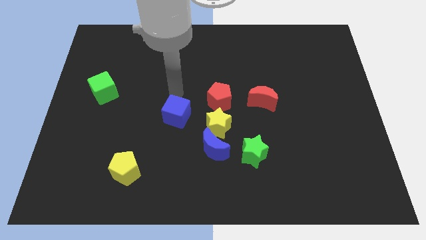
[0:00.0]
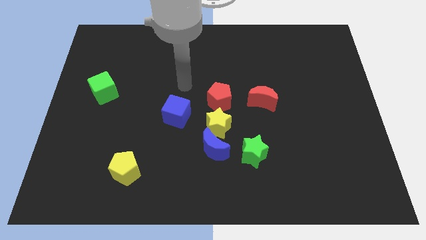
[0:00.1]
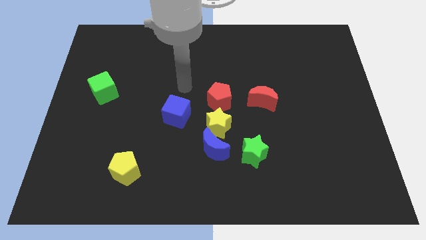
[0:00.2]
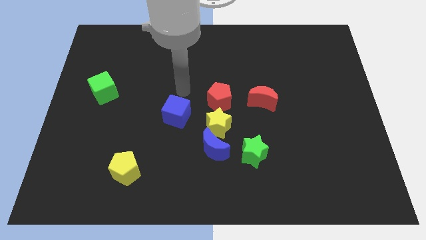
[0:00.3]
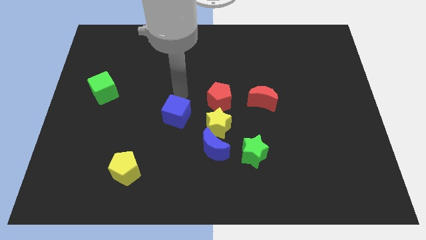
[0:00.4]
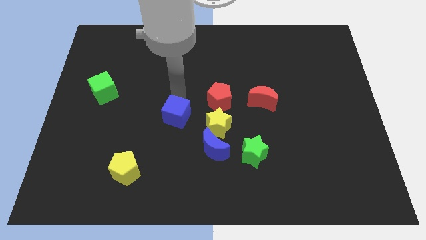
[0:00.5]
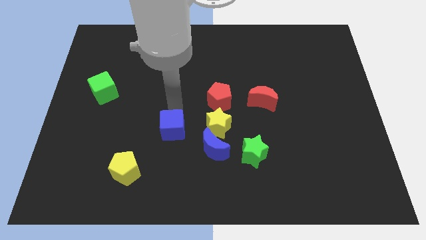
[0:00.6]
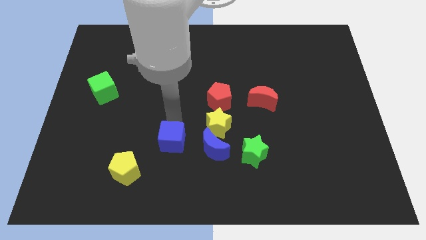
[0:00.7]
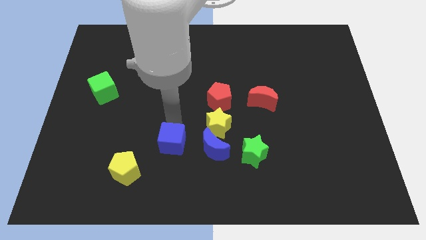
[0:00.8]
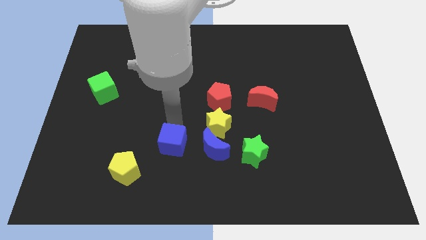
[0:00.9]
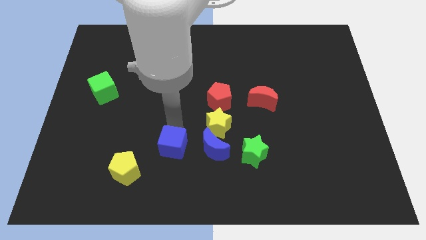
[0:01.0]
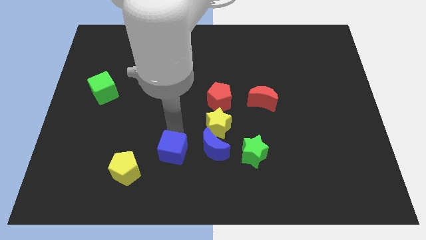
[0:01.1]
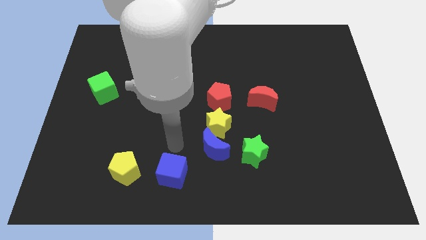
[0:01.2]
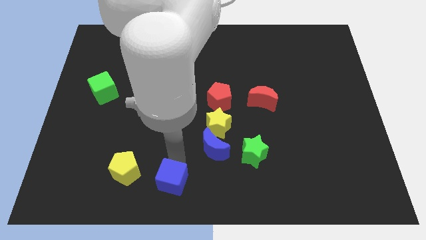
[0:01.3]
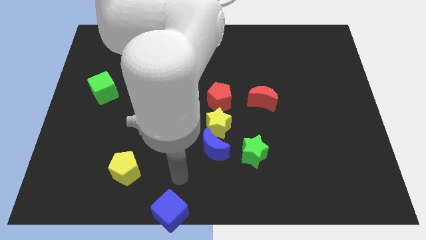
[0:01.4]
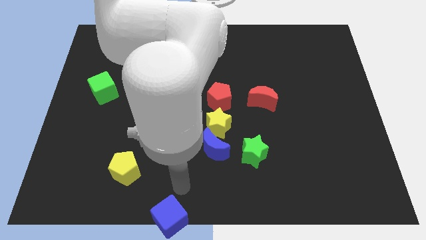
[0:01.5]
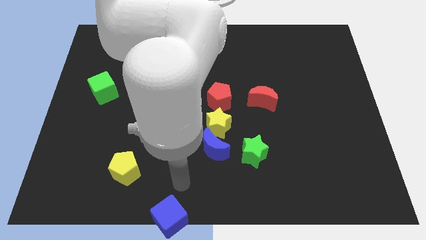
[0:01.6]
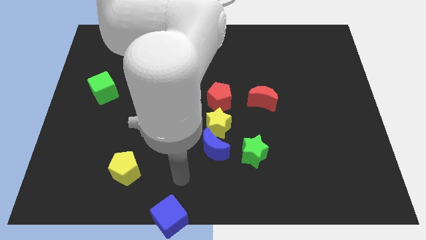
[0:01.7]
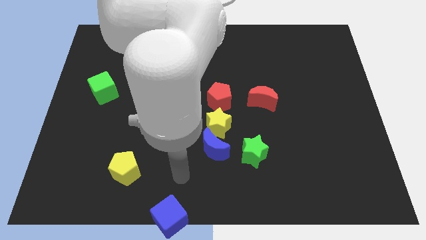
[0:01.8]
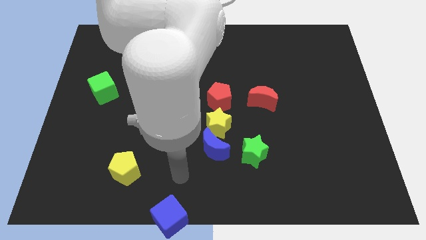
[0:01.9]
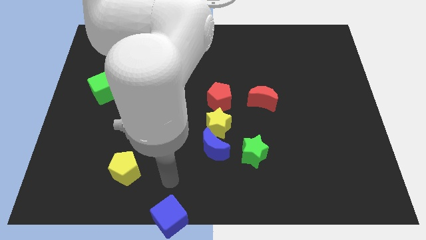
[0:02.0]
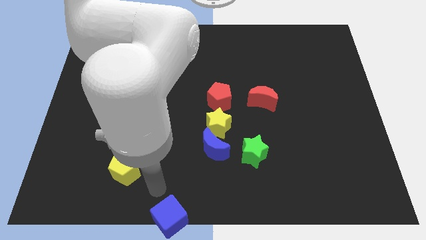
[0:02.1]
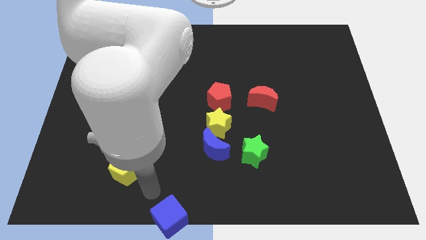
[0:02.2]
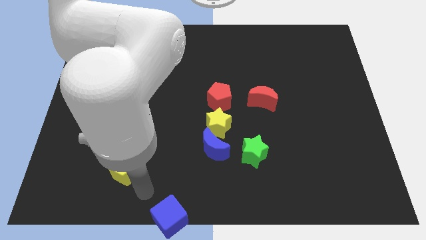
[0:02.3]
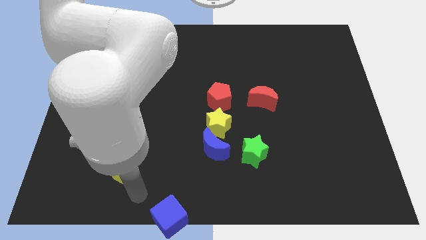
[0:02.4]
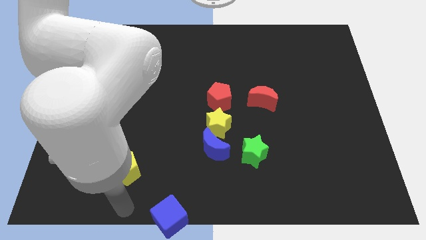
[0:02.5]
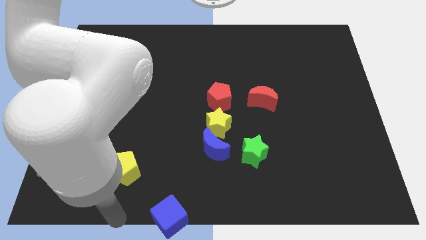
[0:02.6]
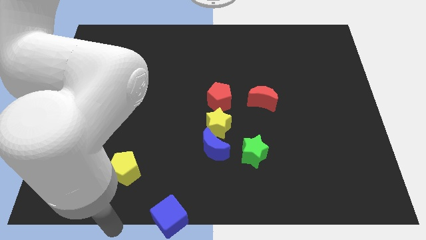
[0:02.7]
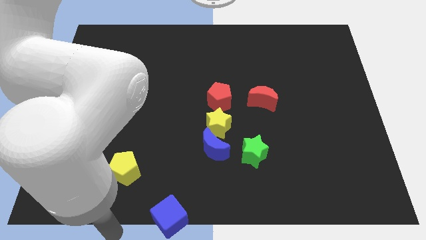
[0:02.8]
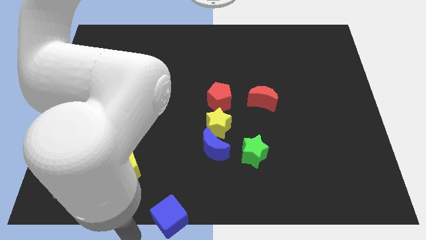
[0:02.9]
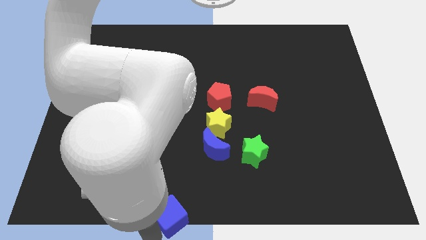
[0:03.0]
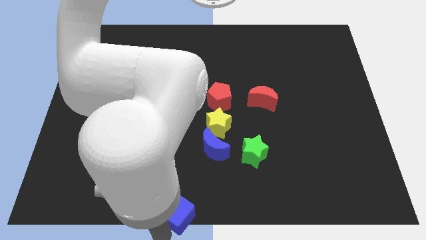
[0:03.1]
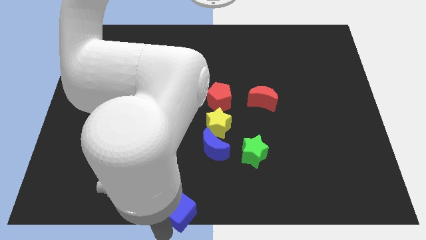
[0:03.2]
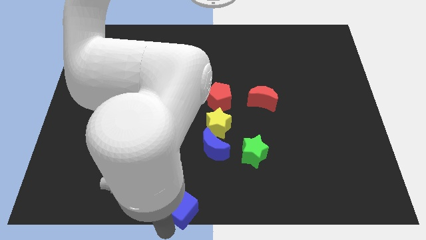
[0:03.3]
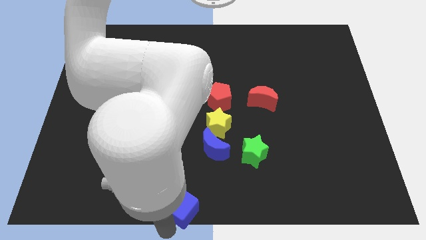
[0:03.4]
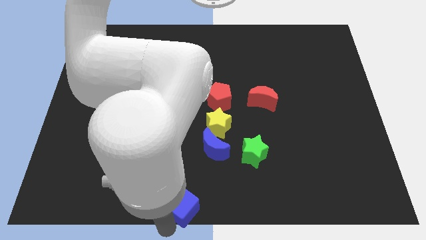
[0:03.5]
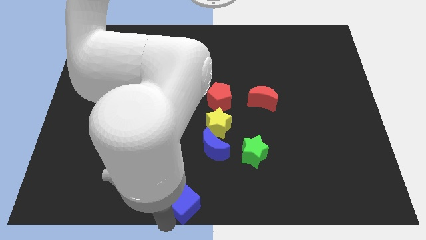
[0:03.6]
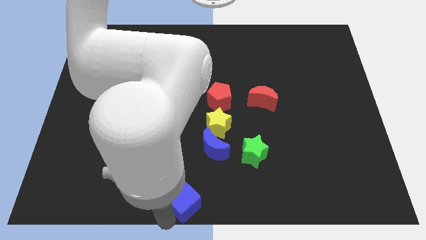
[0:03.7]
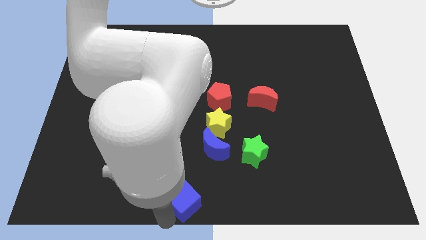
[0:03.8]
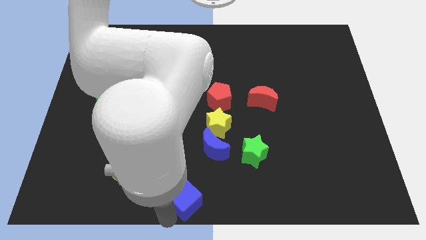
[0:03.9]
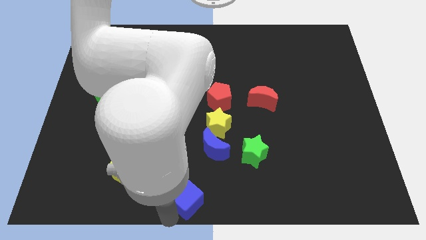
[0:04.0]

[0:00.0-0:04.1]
put the blue cube at the bottom center of the board

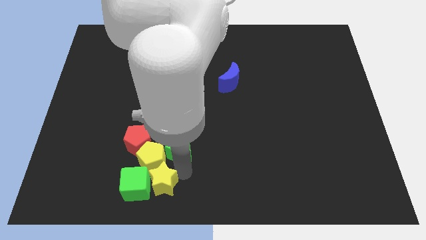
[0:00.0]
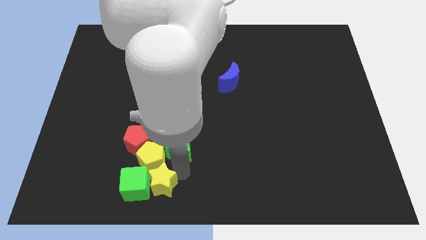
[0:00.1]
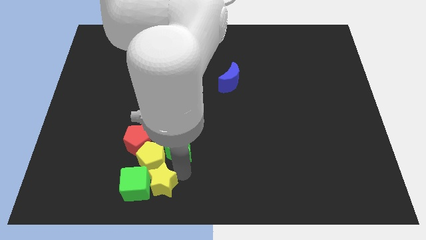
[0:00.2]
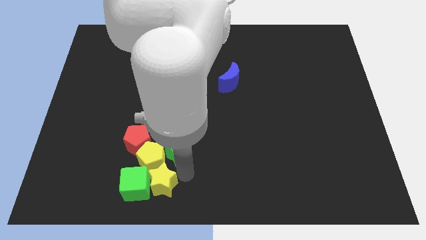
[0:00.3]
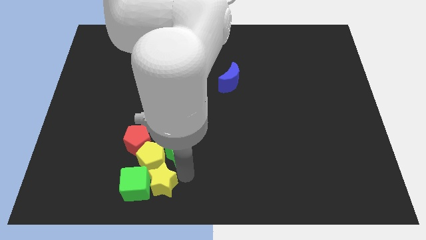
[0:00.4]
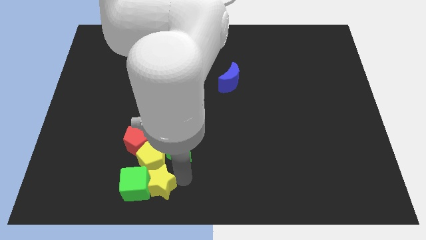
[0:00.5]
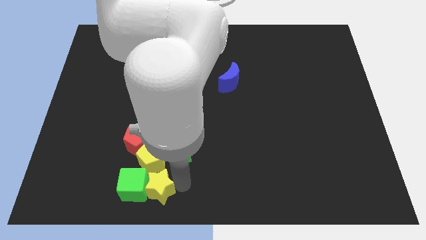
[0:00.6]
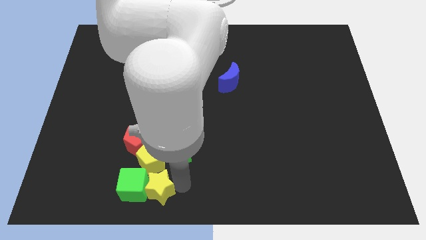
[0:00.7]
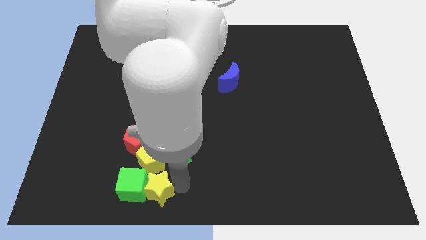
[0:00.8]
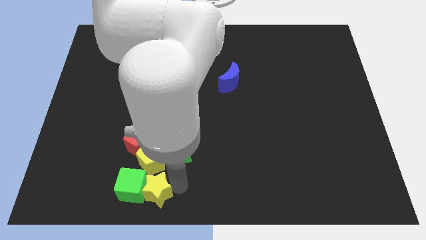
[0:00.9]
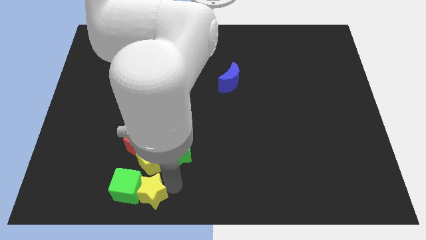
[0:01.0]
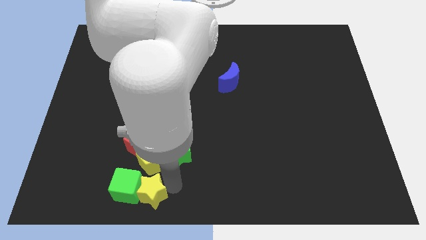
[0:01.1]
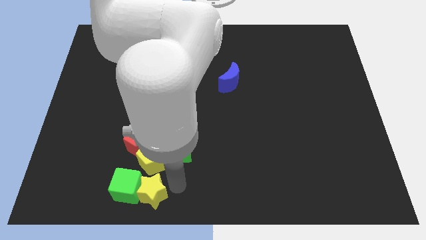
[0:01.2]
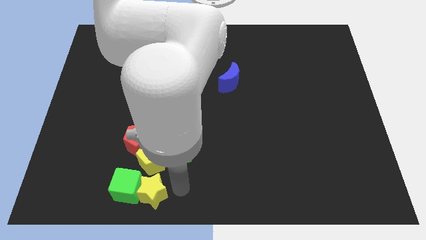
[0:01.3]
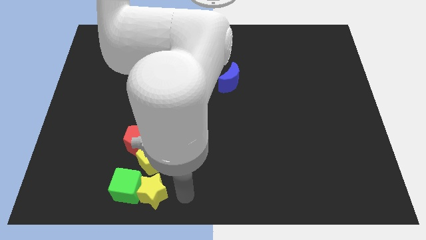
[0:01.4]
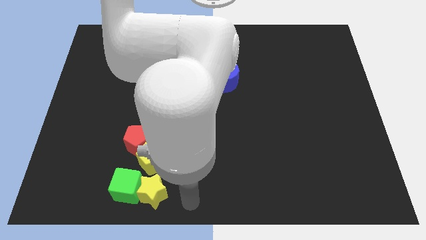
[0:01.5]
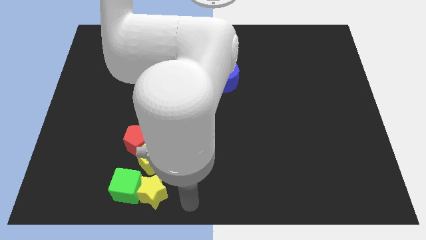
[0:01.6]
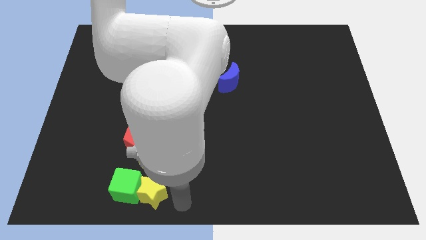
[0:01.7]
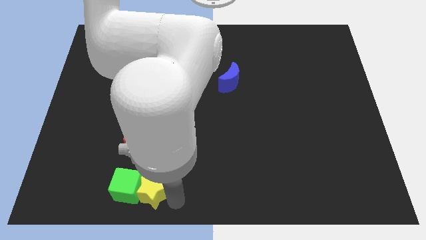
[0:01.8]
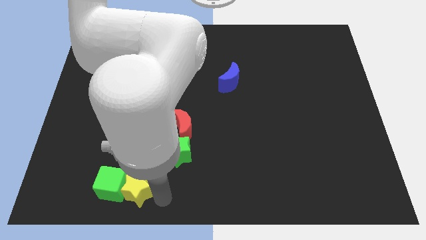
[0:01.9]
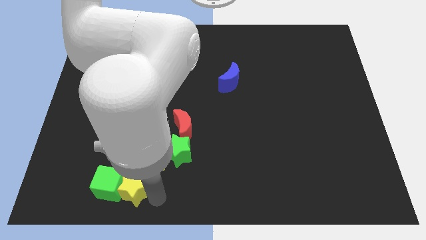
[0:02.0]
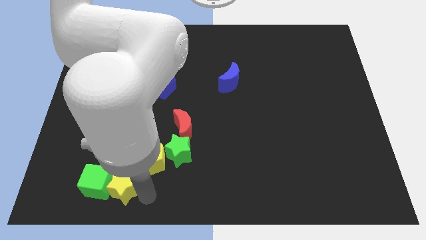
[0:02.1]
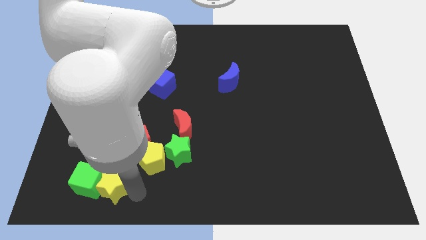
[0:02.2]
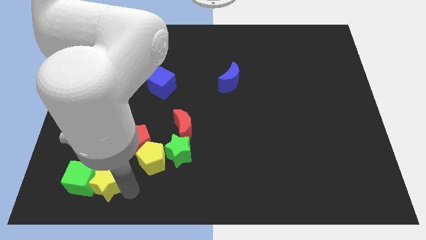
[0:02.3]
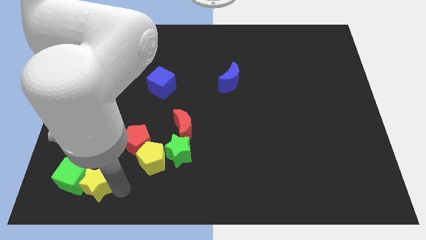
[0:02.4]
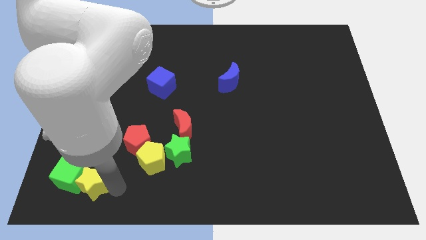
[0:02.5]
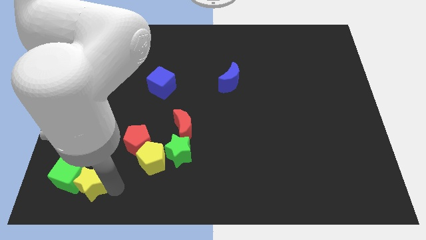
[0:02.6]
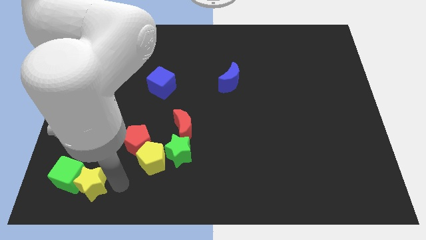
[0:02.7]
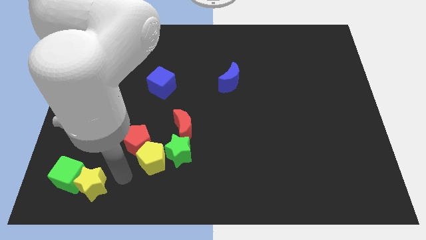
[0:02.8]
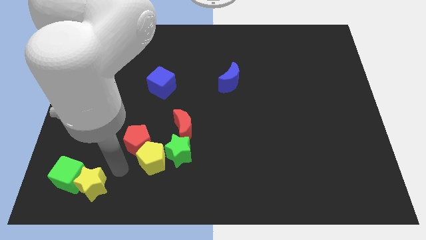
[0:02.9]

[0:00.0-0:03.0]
push the yellow star and green cube to the left side bottom

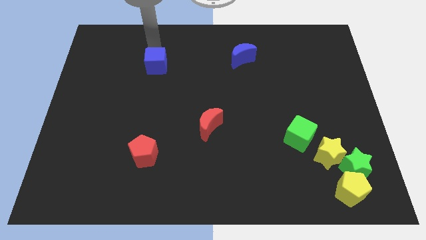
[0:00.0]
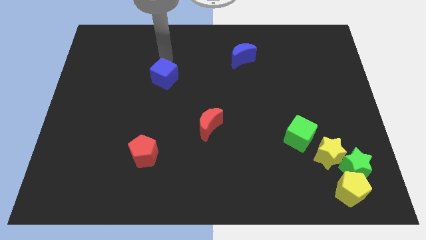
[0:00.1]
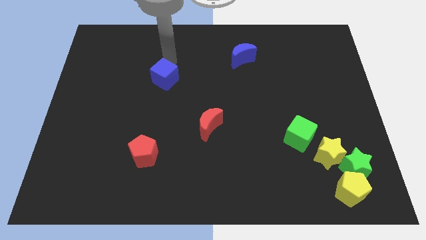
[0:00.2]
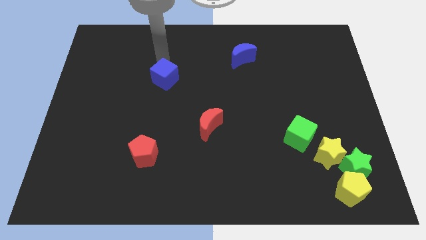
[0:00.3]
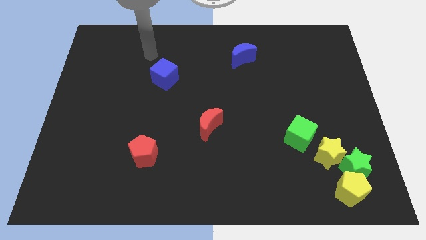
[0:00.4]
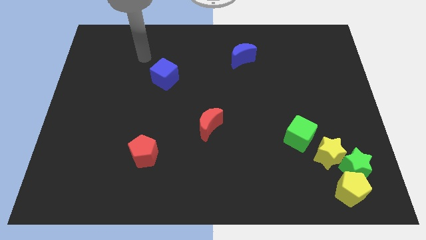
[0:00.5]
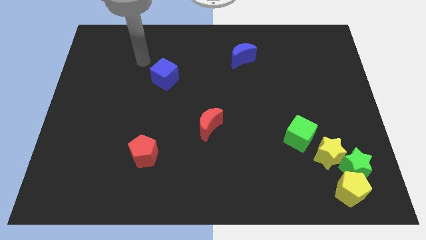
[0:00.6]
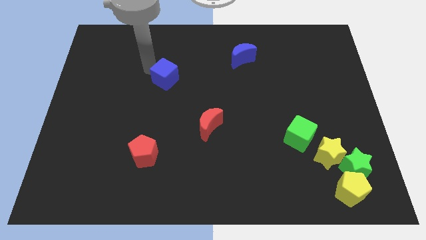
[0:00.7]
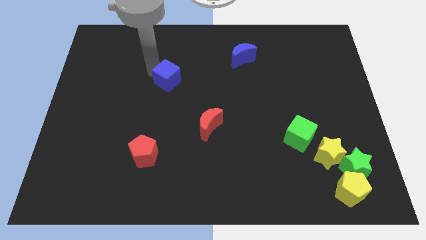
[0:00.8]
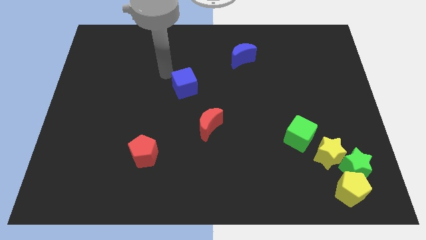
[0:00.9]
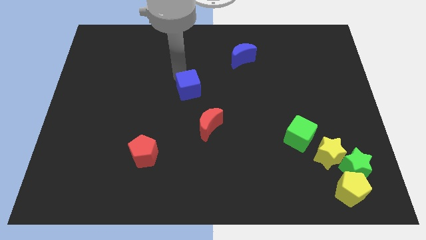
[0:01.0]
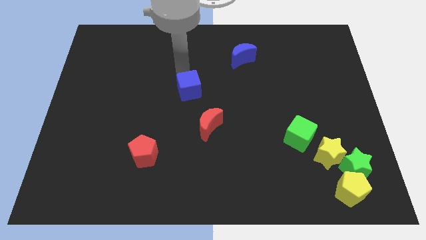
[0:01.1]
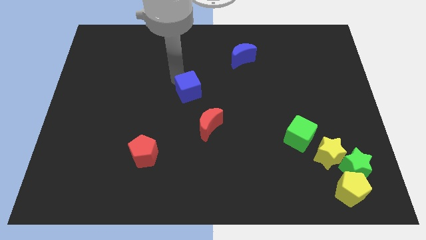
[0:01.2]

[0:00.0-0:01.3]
put the blue cube diagonally bottom left to the blue moon

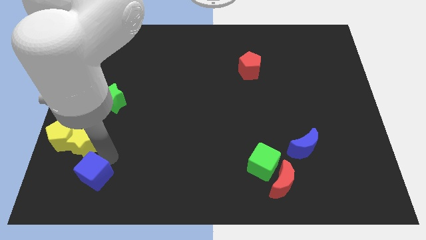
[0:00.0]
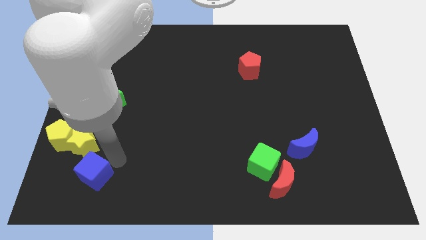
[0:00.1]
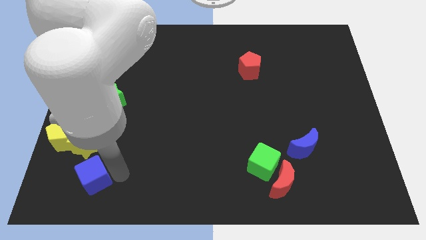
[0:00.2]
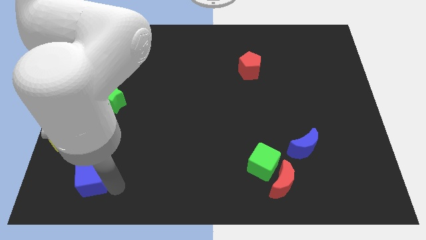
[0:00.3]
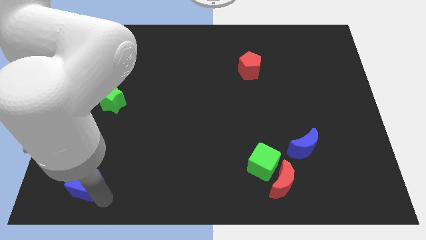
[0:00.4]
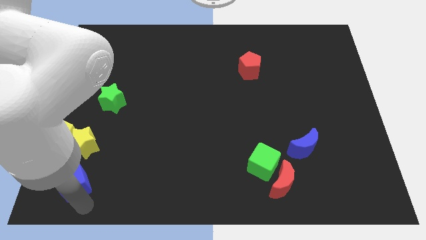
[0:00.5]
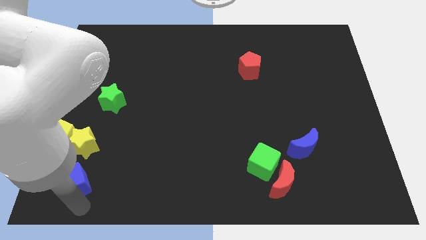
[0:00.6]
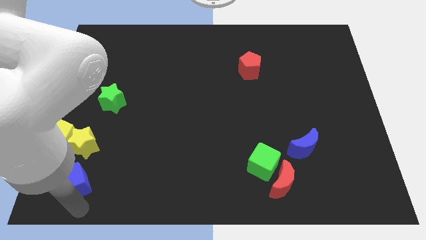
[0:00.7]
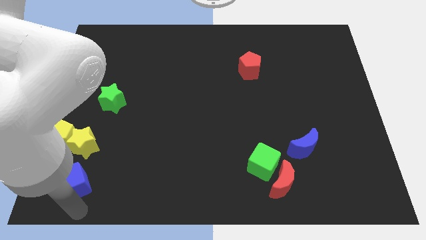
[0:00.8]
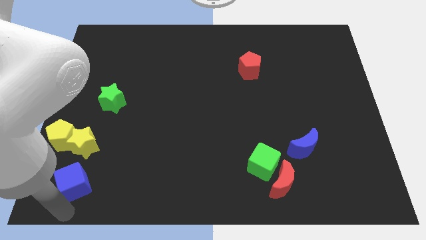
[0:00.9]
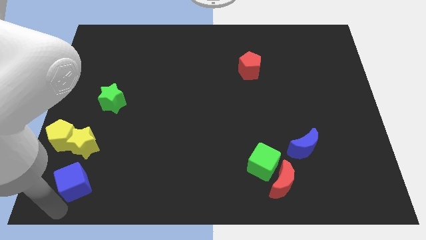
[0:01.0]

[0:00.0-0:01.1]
push blue cube towards bottom left
